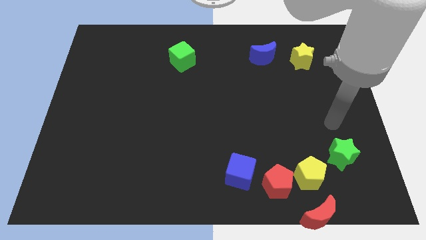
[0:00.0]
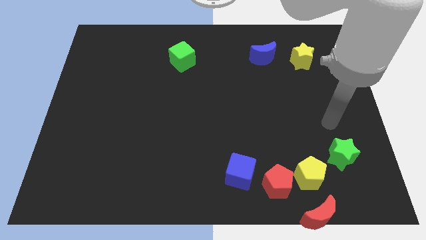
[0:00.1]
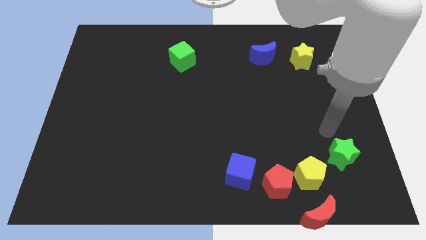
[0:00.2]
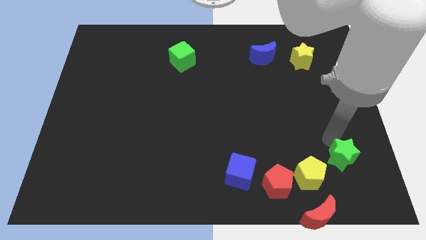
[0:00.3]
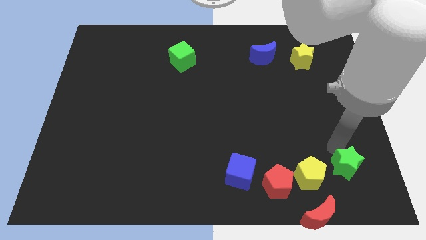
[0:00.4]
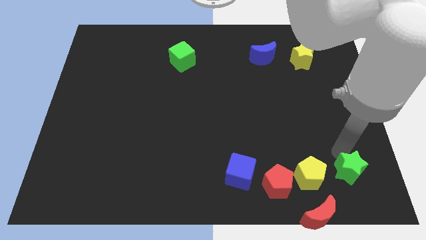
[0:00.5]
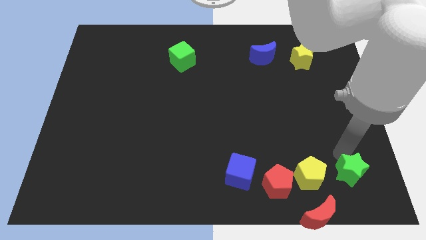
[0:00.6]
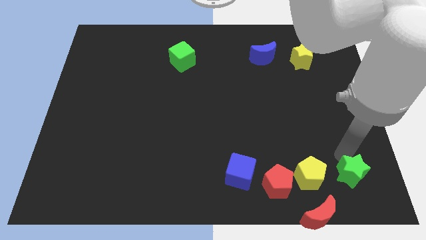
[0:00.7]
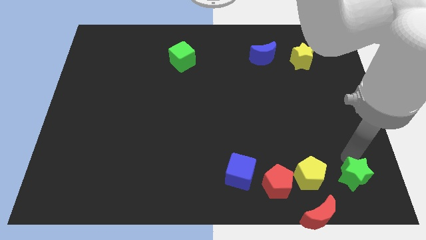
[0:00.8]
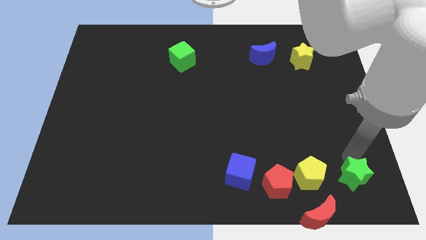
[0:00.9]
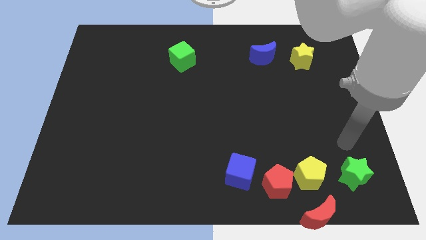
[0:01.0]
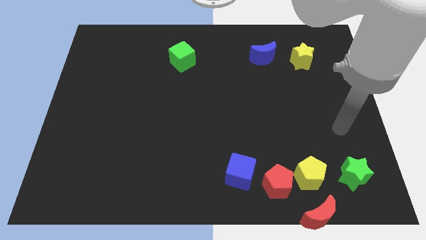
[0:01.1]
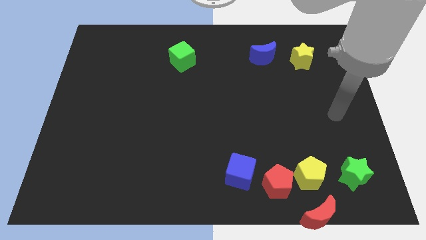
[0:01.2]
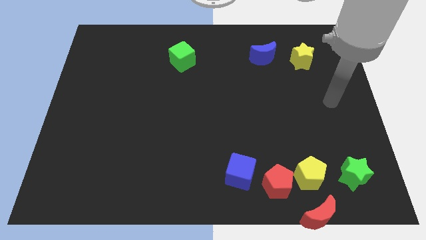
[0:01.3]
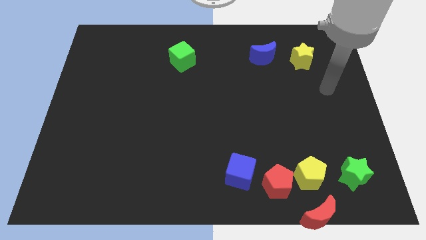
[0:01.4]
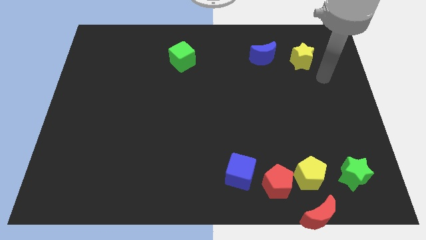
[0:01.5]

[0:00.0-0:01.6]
place the green block adjacent to the yellow pentagon

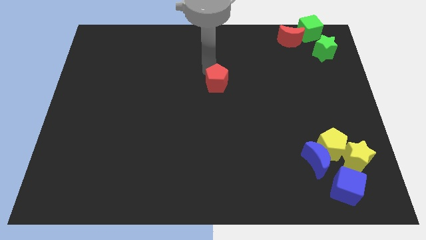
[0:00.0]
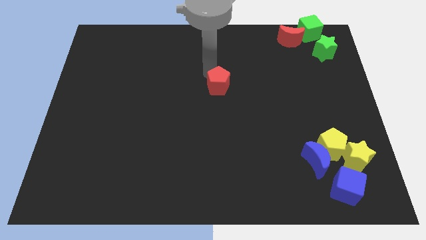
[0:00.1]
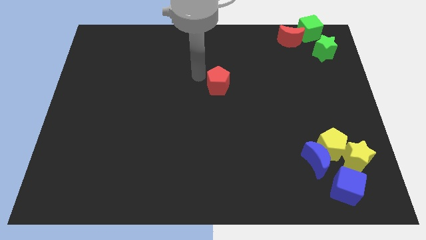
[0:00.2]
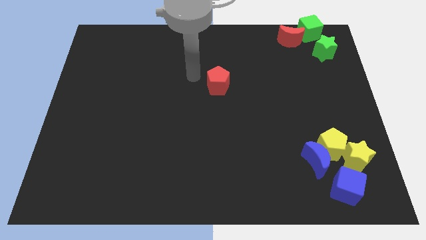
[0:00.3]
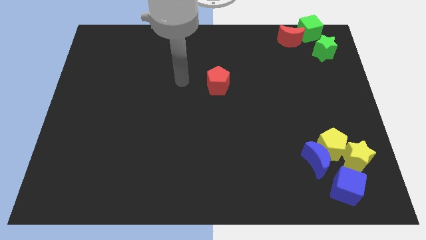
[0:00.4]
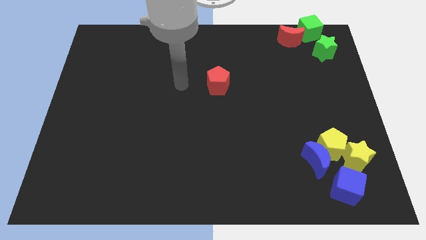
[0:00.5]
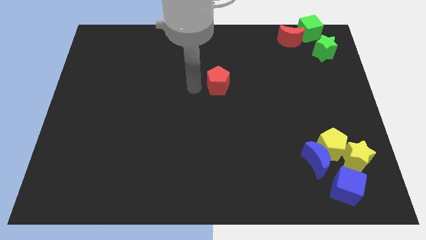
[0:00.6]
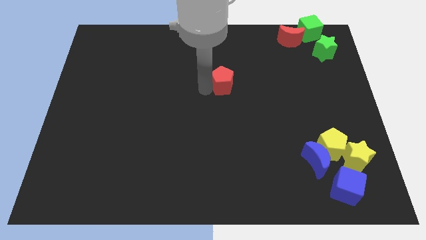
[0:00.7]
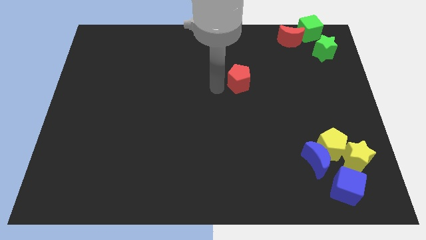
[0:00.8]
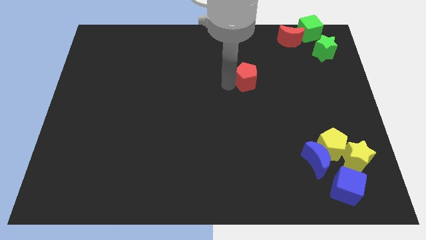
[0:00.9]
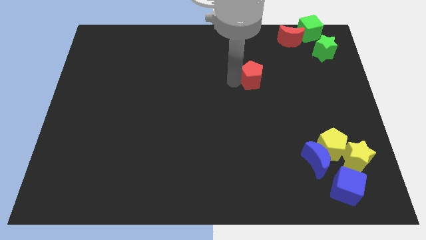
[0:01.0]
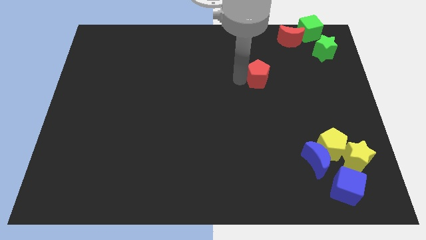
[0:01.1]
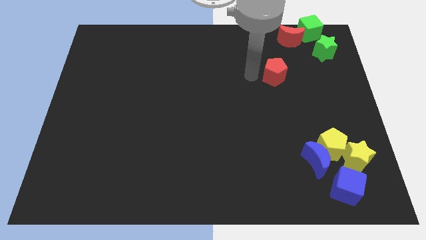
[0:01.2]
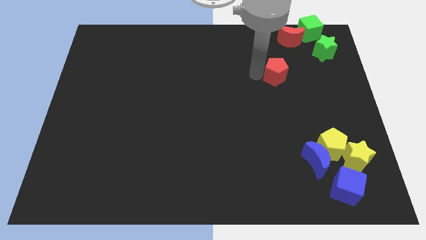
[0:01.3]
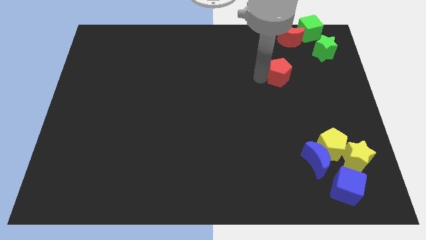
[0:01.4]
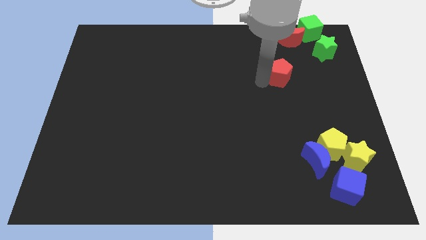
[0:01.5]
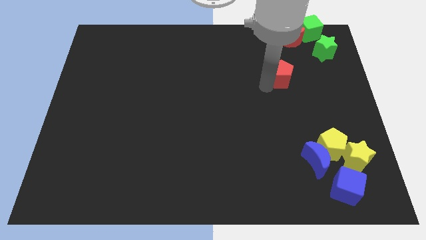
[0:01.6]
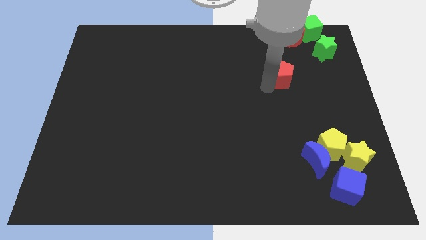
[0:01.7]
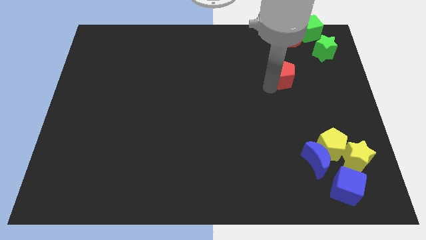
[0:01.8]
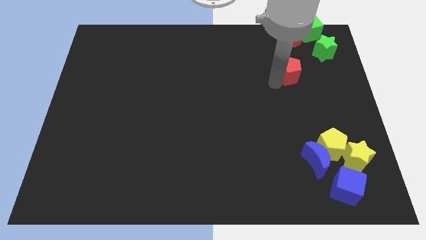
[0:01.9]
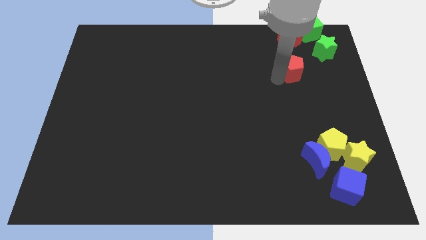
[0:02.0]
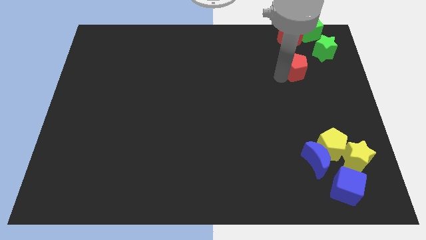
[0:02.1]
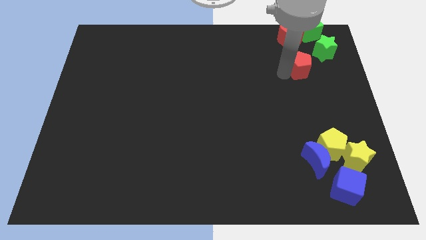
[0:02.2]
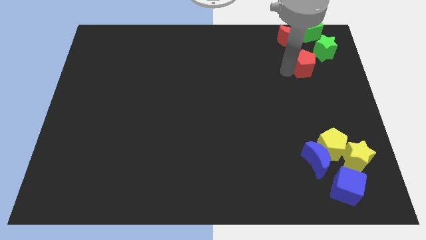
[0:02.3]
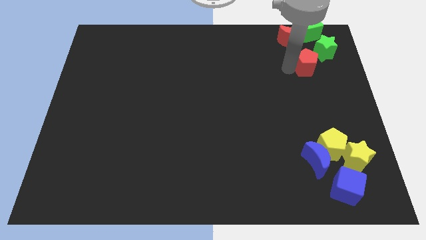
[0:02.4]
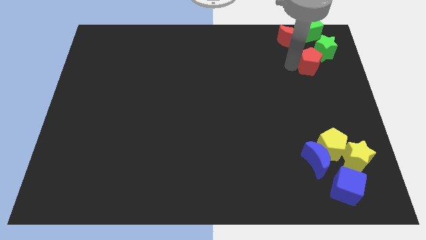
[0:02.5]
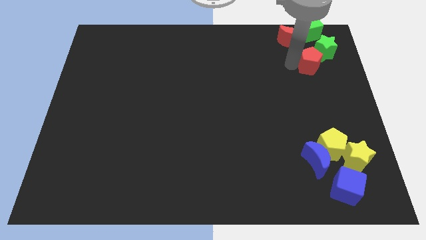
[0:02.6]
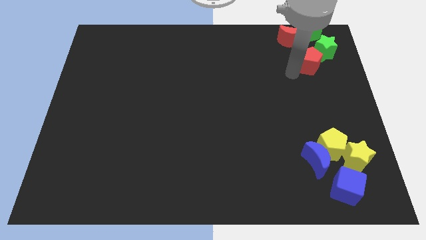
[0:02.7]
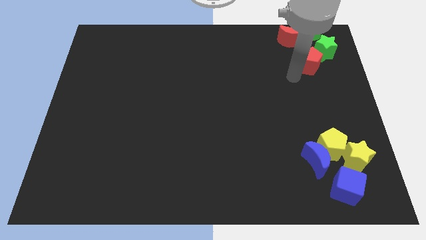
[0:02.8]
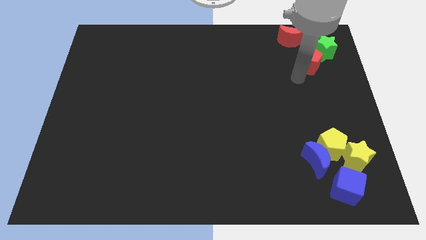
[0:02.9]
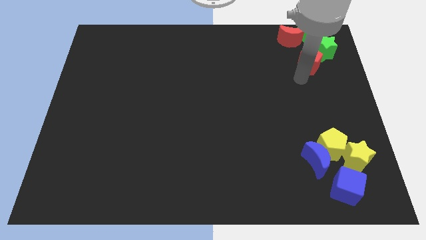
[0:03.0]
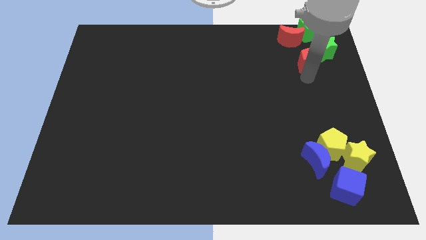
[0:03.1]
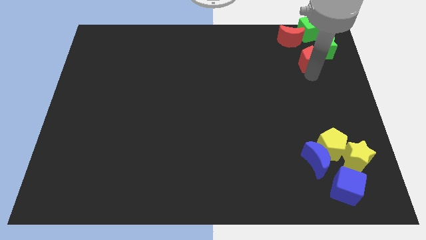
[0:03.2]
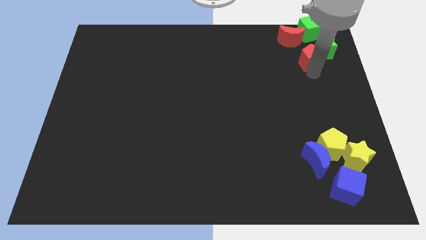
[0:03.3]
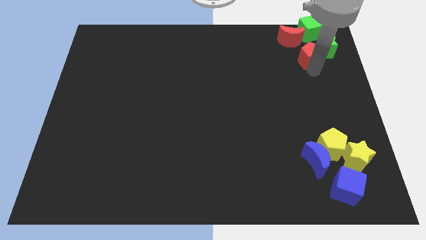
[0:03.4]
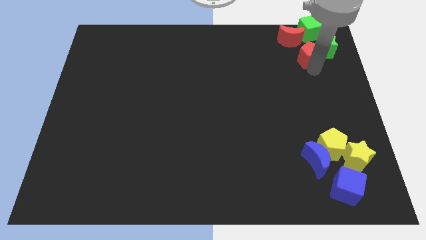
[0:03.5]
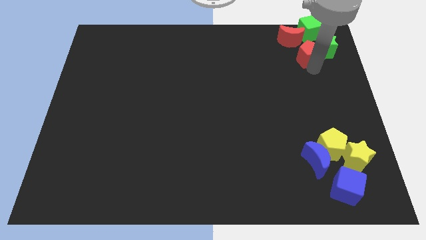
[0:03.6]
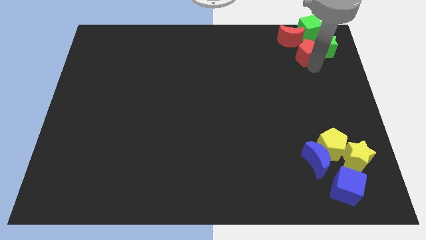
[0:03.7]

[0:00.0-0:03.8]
push the red pentagon to the left of the green star

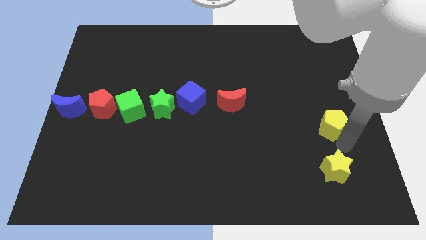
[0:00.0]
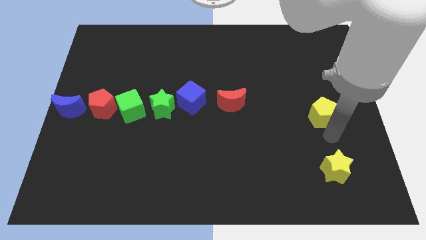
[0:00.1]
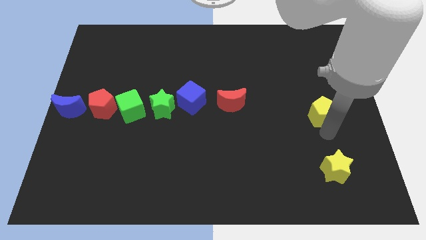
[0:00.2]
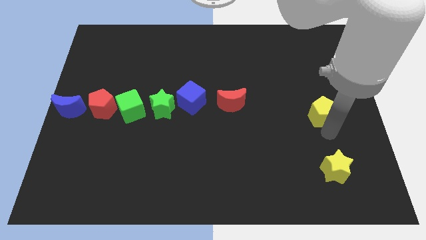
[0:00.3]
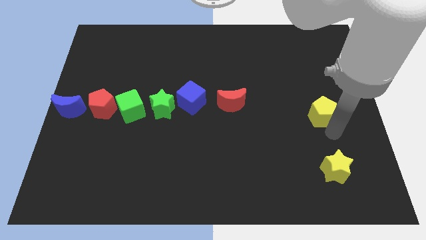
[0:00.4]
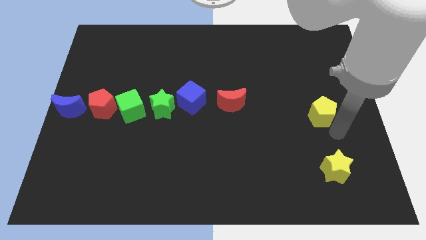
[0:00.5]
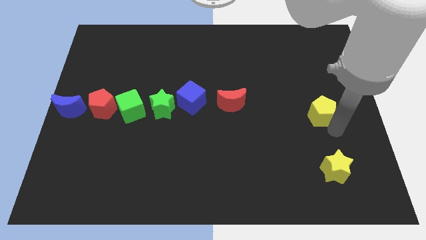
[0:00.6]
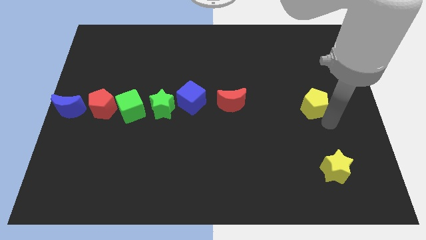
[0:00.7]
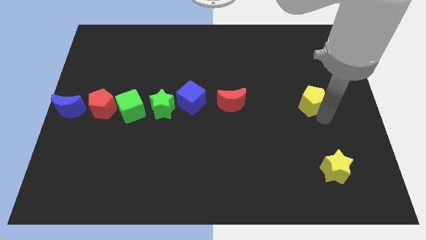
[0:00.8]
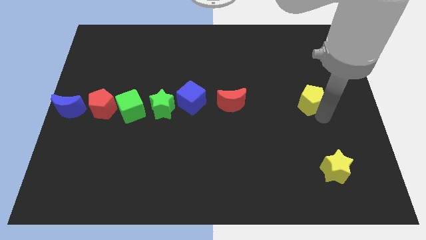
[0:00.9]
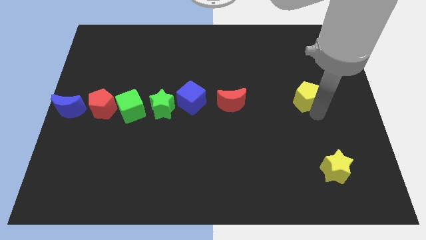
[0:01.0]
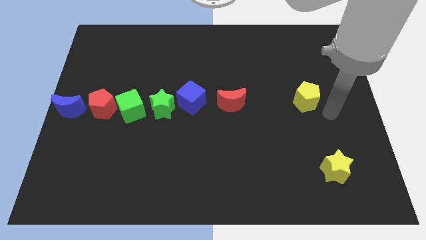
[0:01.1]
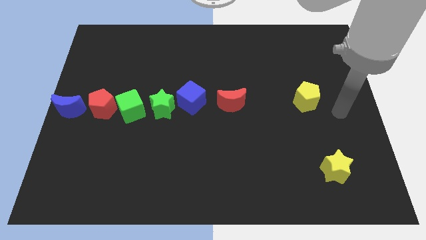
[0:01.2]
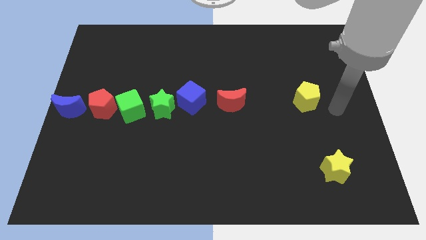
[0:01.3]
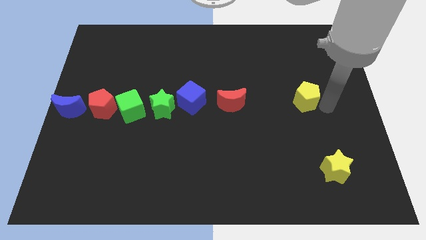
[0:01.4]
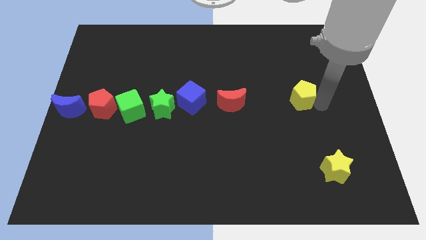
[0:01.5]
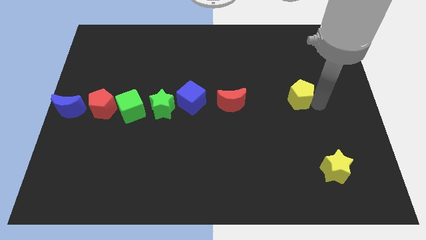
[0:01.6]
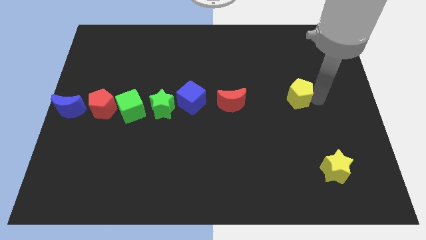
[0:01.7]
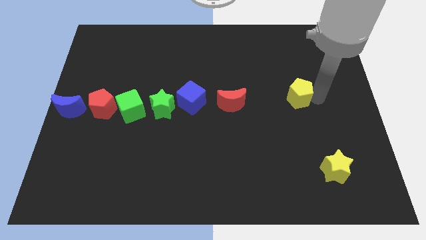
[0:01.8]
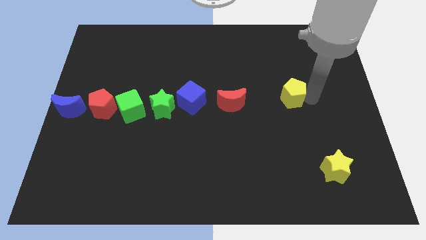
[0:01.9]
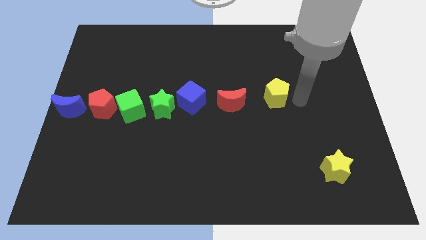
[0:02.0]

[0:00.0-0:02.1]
push the yellow pentagon to the right of the red crescent

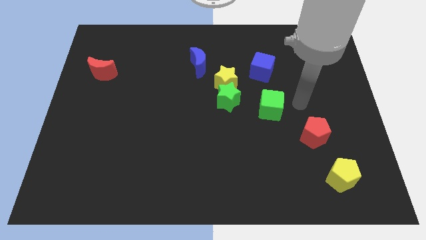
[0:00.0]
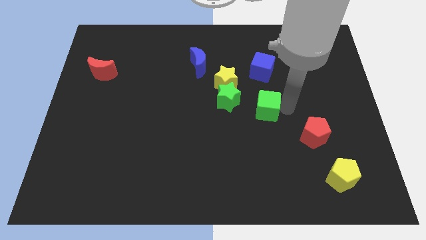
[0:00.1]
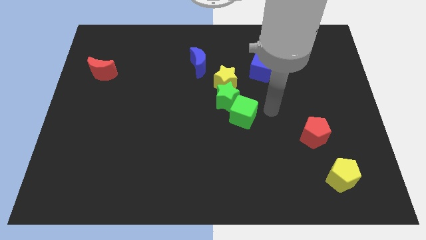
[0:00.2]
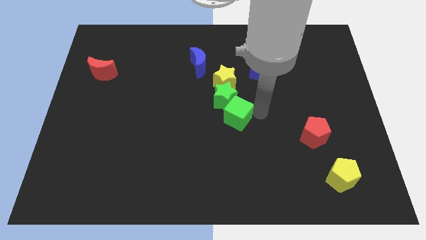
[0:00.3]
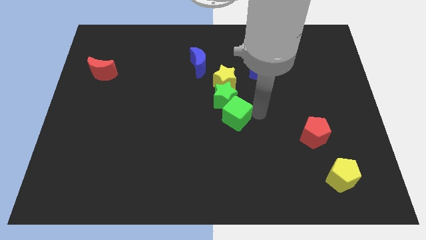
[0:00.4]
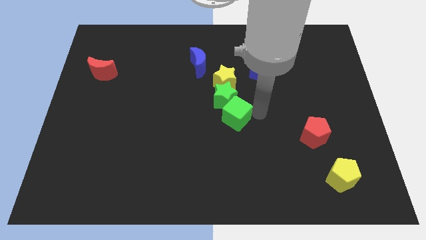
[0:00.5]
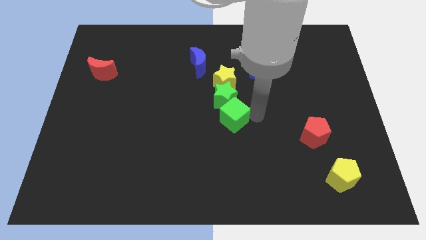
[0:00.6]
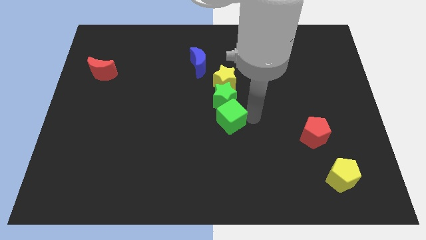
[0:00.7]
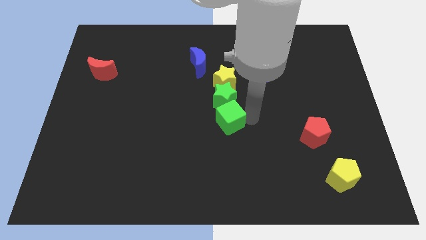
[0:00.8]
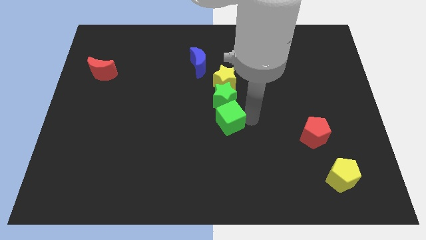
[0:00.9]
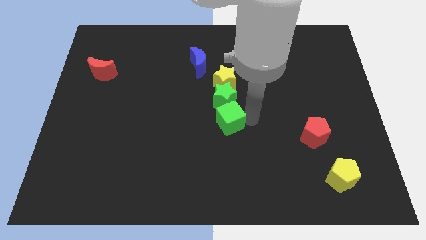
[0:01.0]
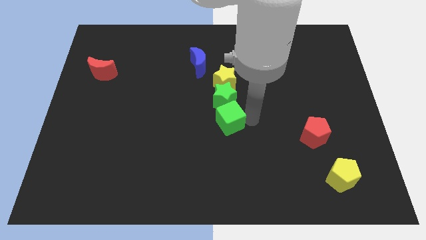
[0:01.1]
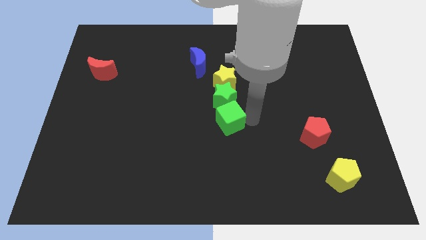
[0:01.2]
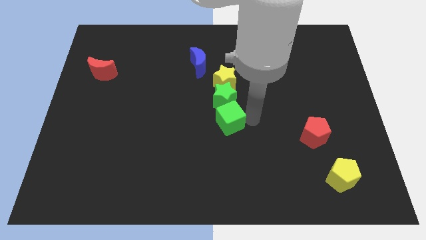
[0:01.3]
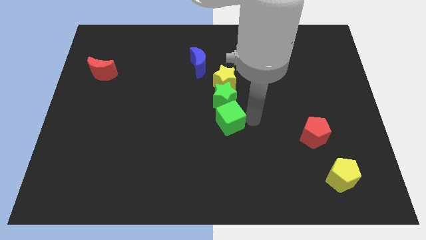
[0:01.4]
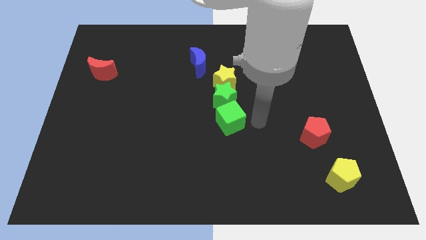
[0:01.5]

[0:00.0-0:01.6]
slide the green cube to the bottom of the green star
